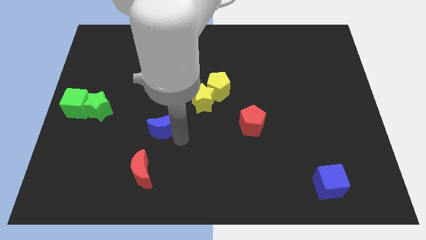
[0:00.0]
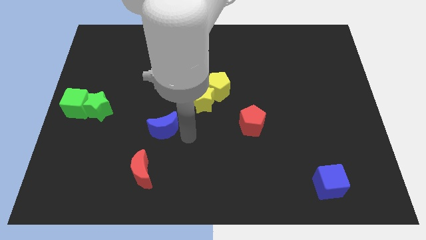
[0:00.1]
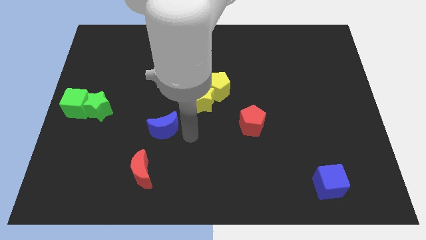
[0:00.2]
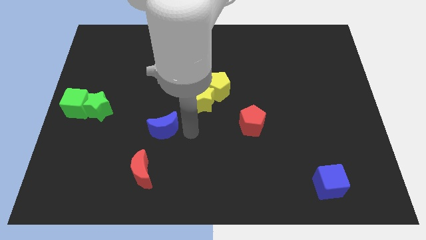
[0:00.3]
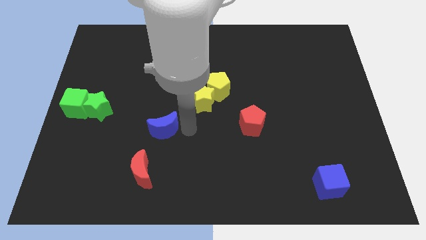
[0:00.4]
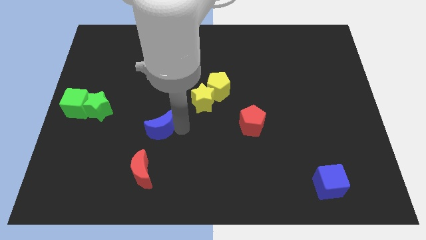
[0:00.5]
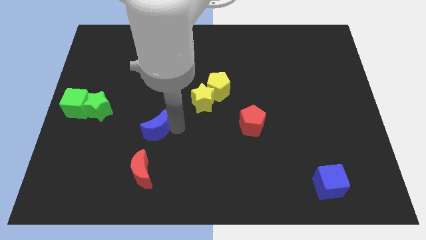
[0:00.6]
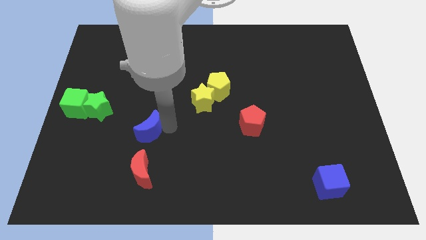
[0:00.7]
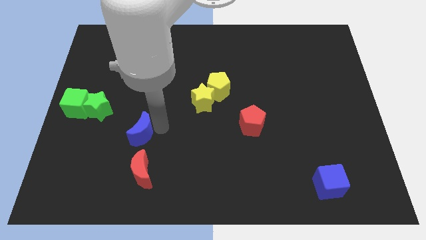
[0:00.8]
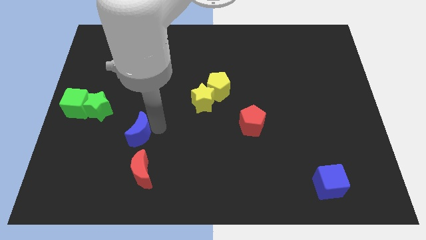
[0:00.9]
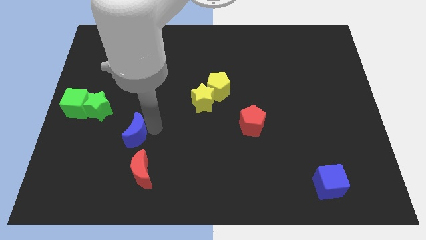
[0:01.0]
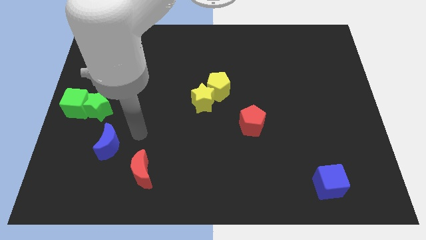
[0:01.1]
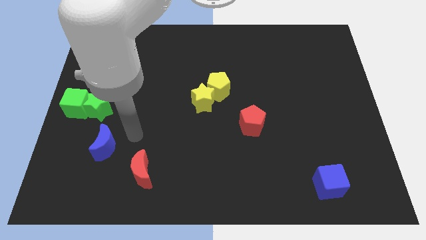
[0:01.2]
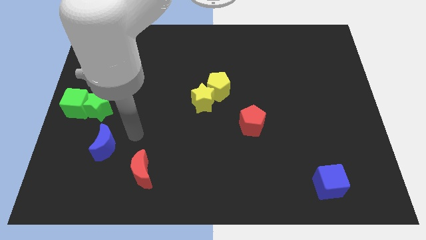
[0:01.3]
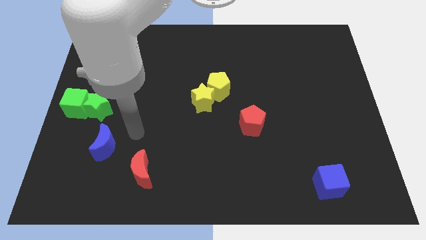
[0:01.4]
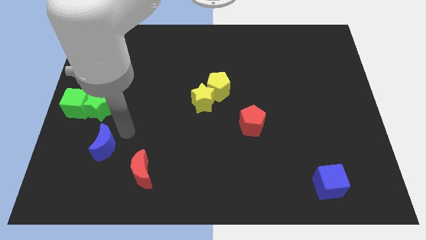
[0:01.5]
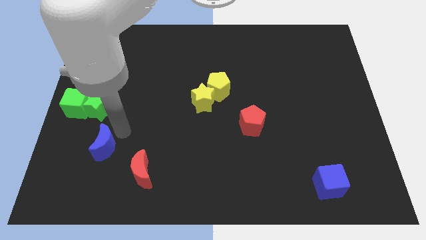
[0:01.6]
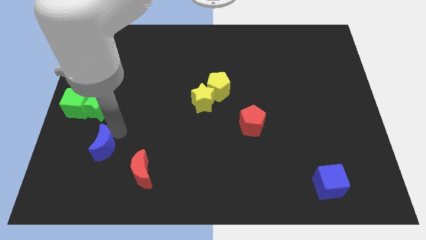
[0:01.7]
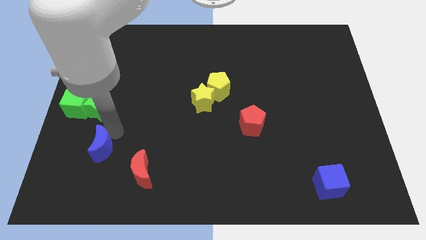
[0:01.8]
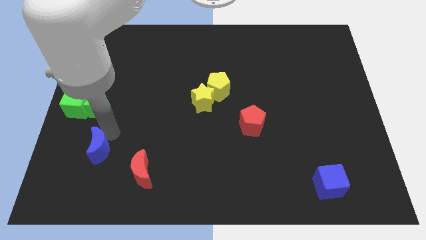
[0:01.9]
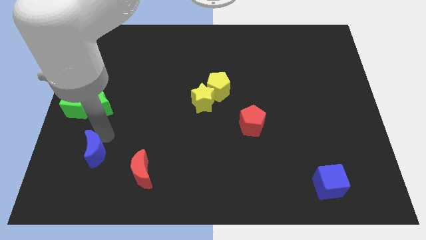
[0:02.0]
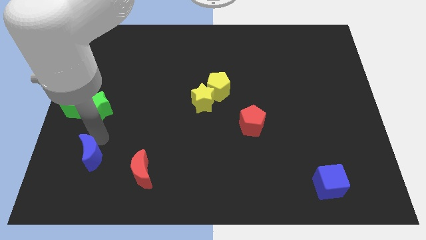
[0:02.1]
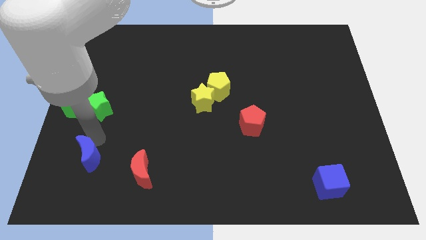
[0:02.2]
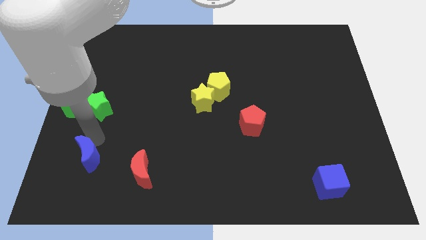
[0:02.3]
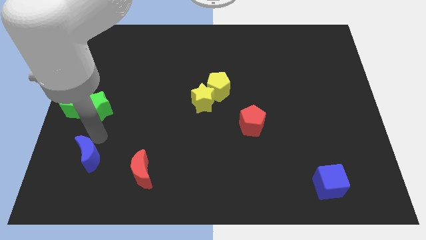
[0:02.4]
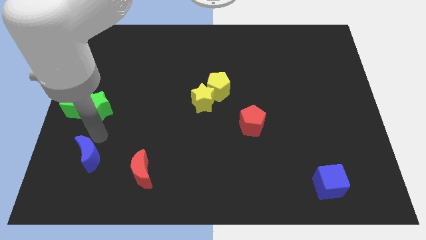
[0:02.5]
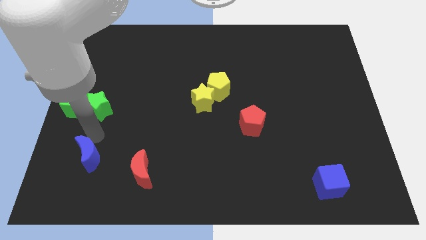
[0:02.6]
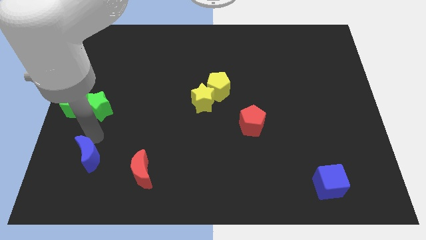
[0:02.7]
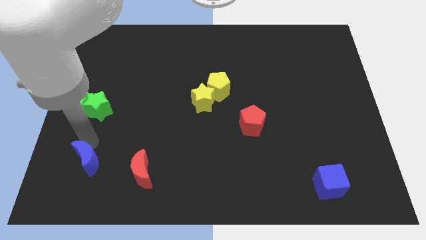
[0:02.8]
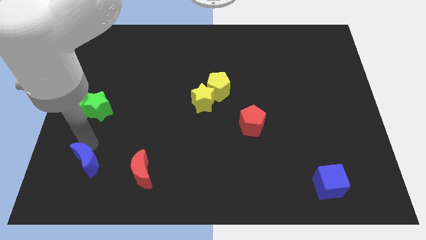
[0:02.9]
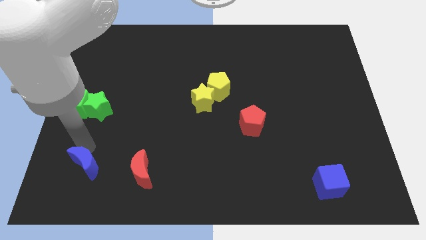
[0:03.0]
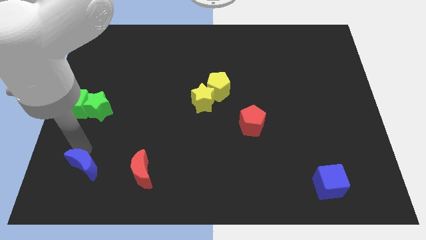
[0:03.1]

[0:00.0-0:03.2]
push the blue crescent towards the bottom left

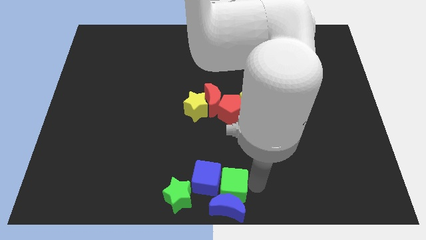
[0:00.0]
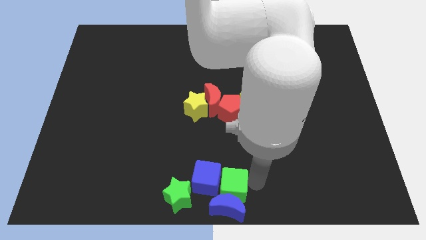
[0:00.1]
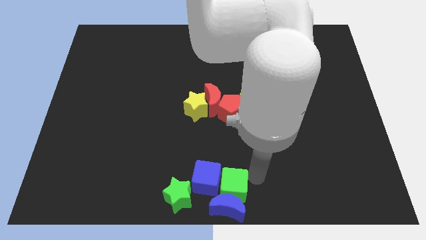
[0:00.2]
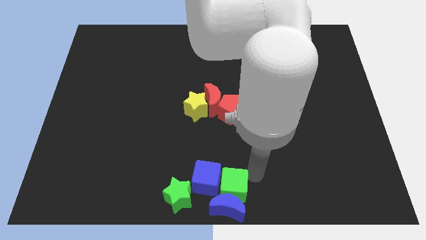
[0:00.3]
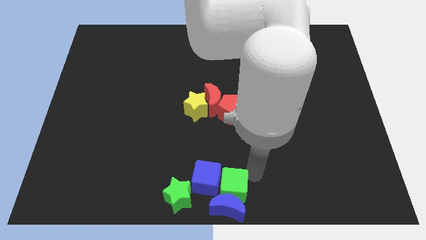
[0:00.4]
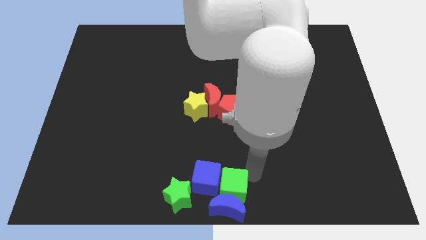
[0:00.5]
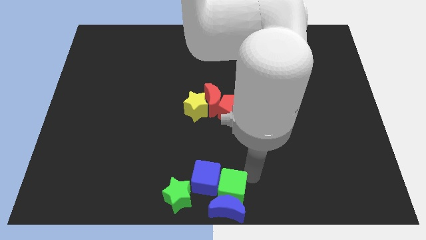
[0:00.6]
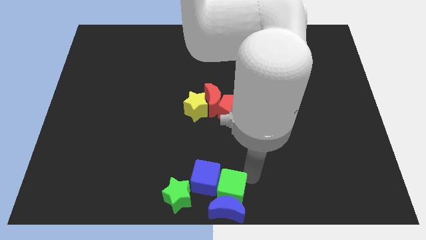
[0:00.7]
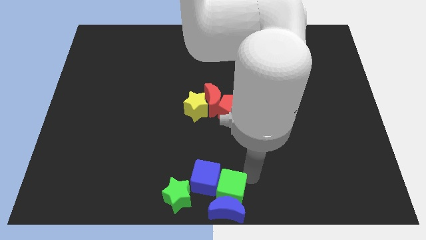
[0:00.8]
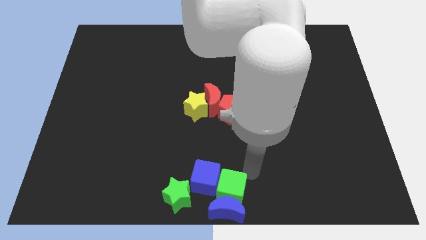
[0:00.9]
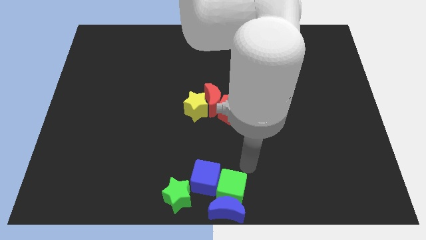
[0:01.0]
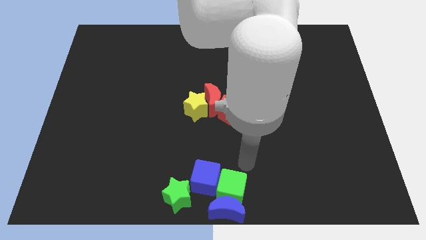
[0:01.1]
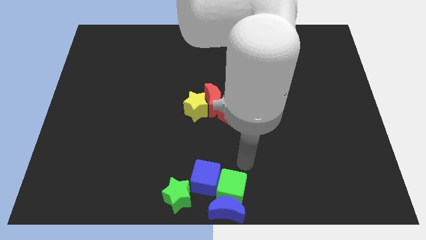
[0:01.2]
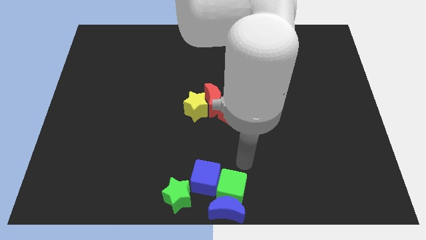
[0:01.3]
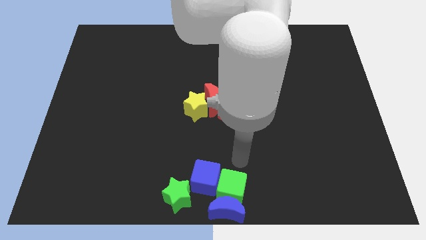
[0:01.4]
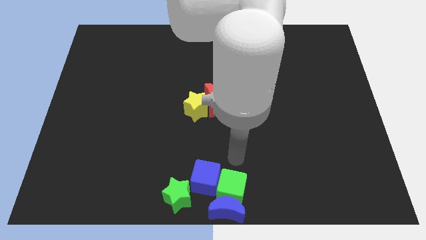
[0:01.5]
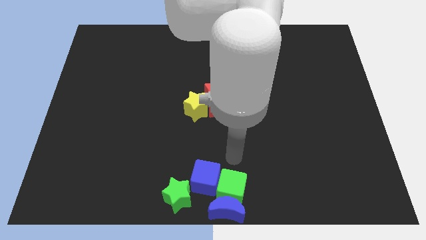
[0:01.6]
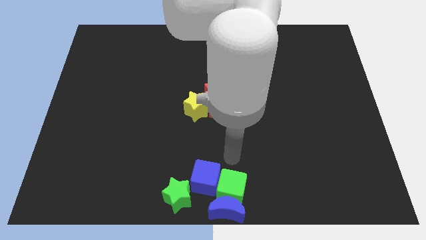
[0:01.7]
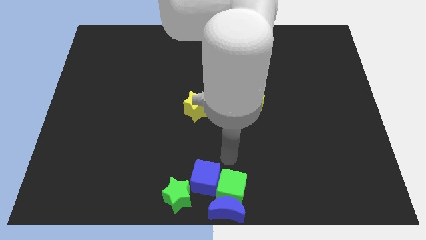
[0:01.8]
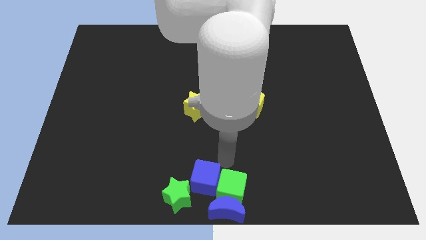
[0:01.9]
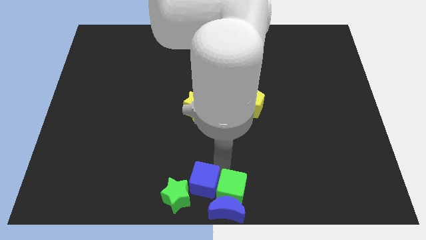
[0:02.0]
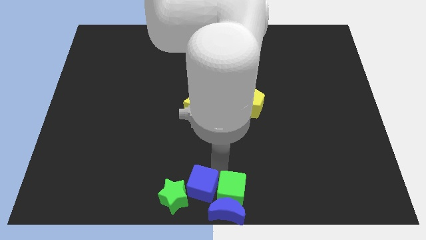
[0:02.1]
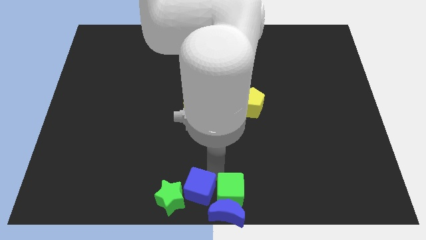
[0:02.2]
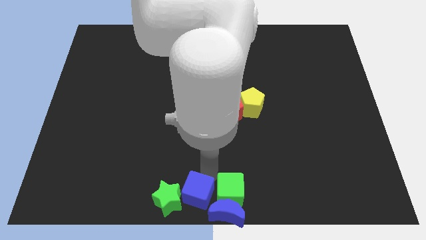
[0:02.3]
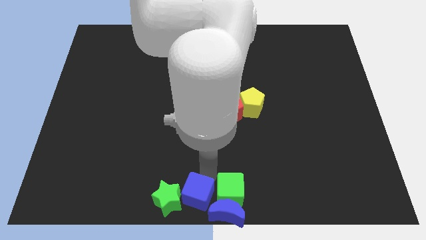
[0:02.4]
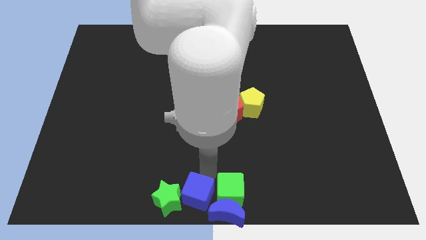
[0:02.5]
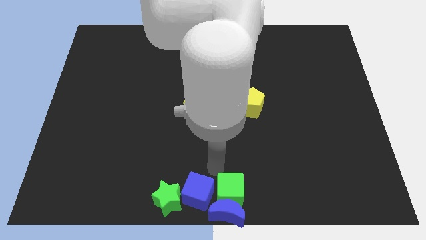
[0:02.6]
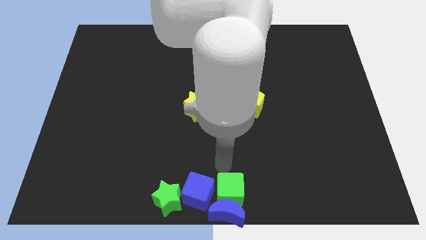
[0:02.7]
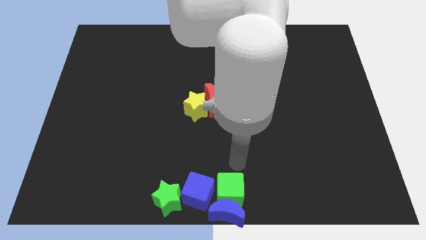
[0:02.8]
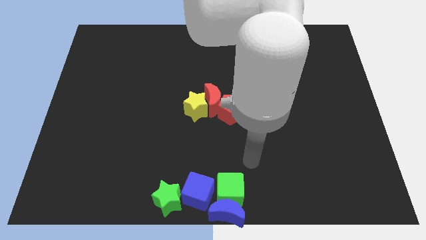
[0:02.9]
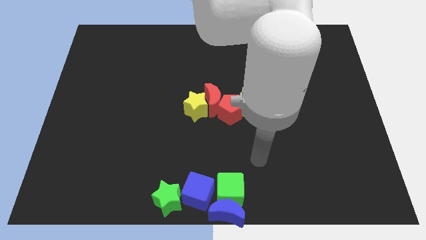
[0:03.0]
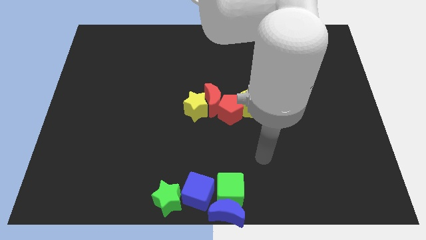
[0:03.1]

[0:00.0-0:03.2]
move your arm away from the blocks

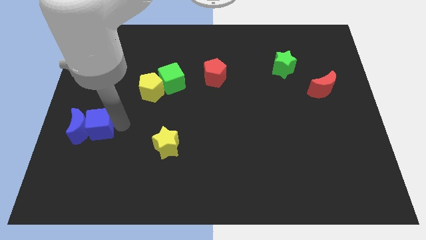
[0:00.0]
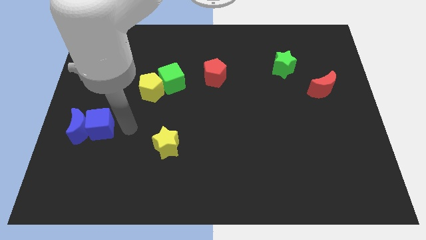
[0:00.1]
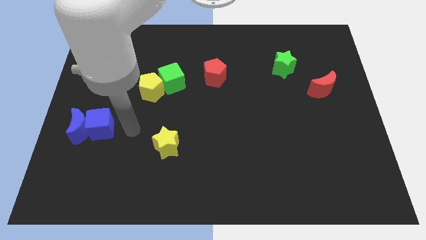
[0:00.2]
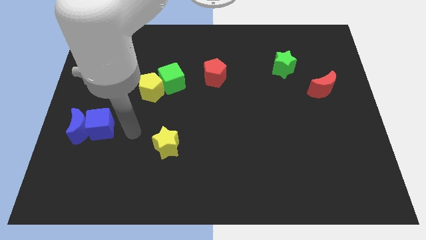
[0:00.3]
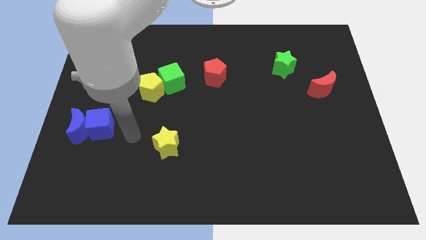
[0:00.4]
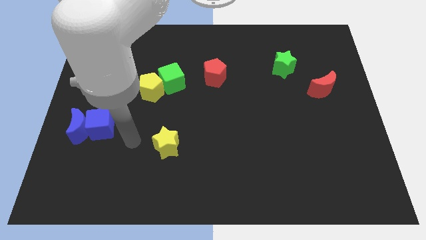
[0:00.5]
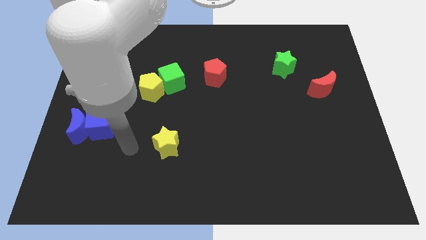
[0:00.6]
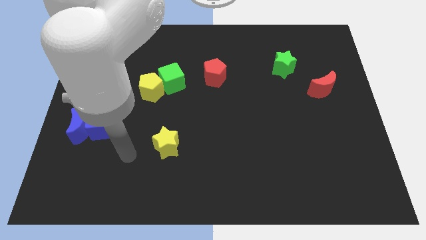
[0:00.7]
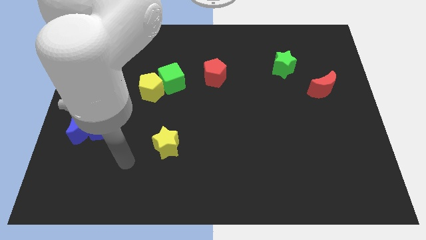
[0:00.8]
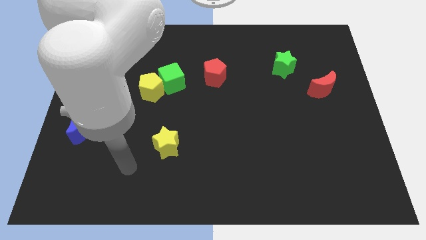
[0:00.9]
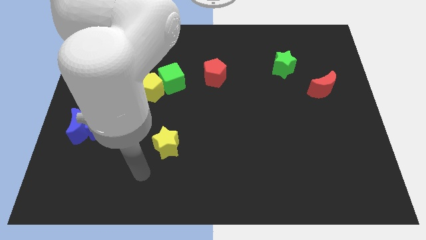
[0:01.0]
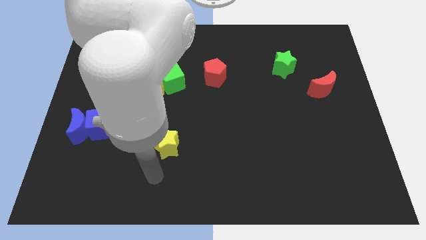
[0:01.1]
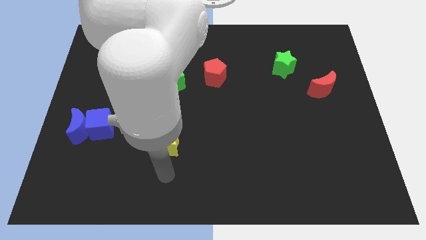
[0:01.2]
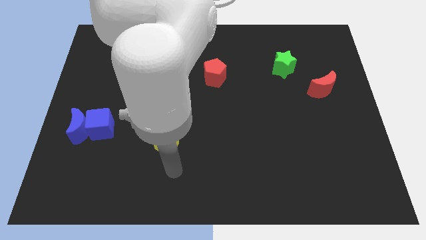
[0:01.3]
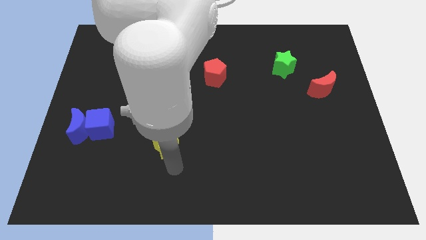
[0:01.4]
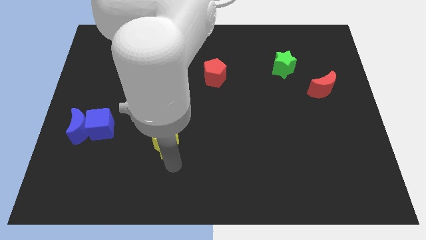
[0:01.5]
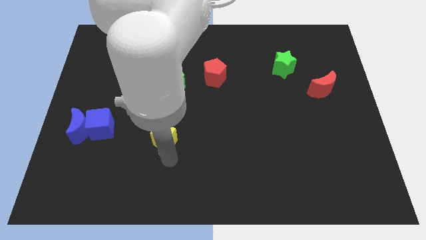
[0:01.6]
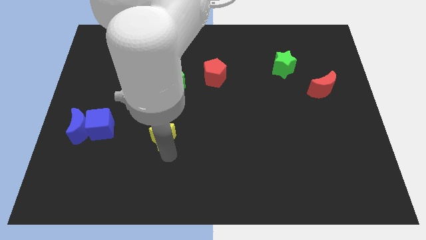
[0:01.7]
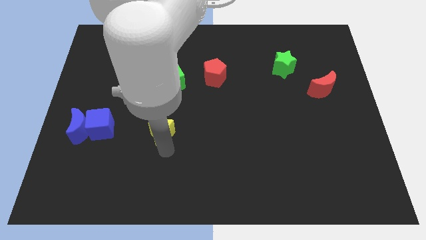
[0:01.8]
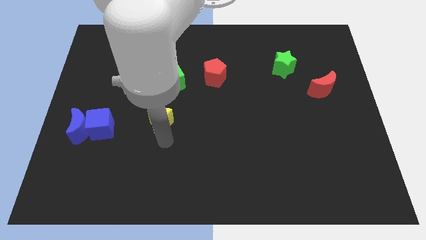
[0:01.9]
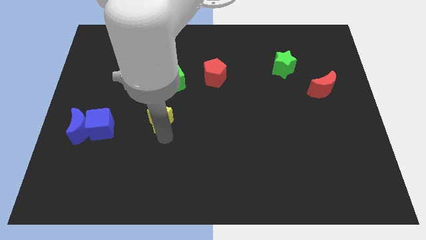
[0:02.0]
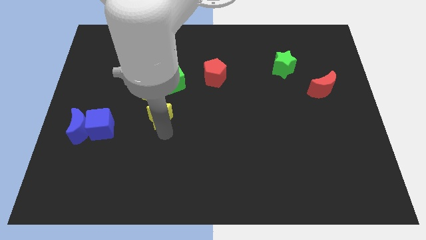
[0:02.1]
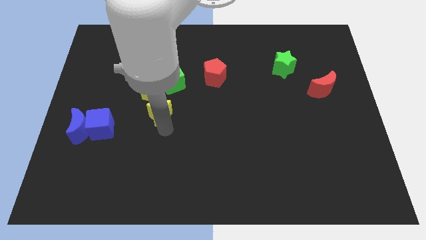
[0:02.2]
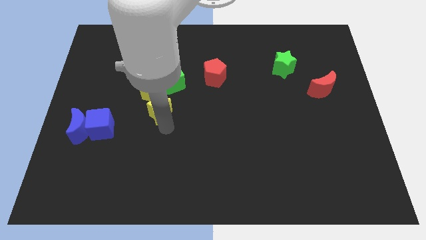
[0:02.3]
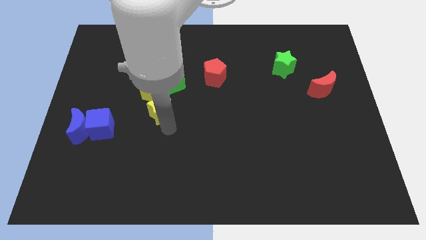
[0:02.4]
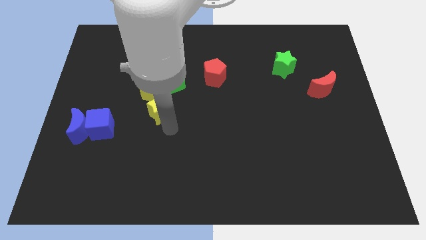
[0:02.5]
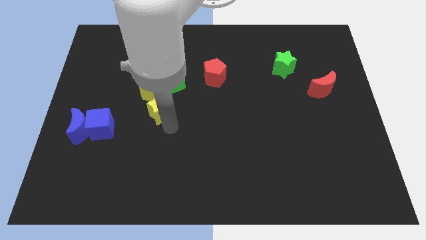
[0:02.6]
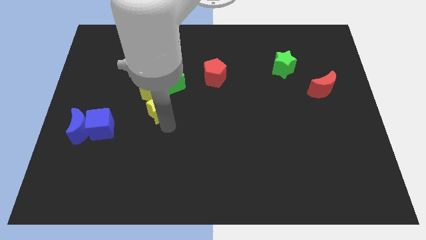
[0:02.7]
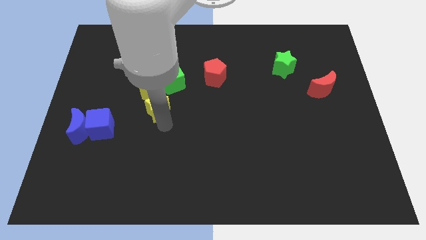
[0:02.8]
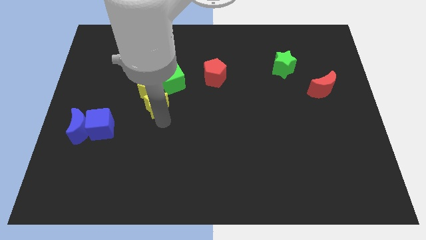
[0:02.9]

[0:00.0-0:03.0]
push the yellow star towards the yellow pentagon
